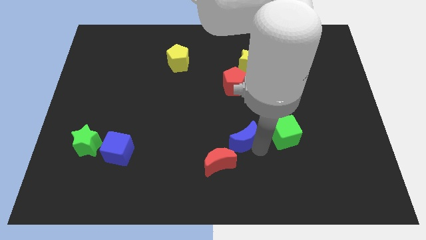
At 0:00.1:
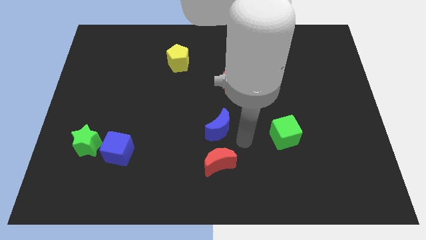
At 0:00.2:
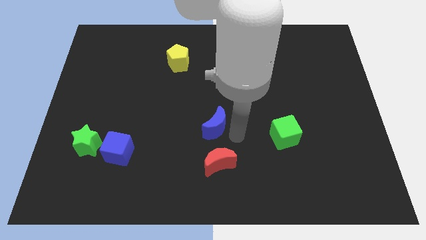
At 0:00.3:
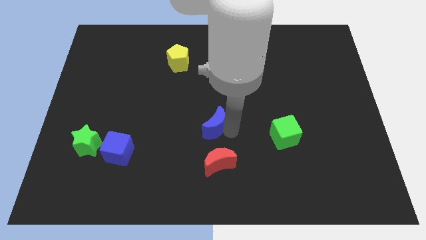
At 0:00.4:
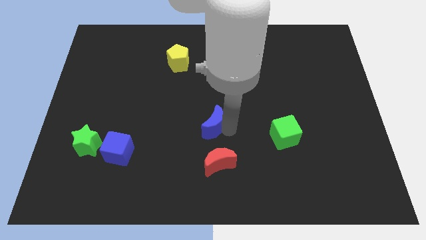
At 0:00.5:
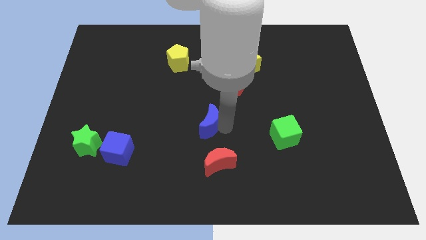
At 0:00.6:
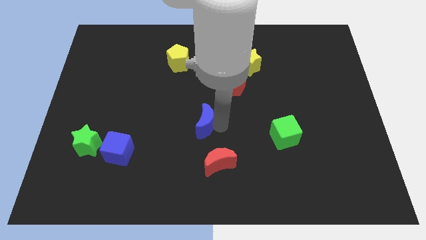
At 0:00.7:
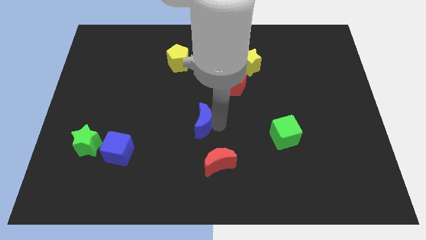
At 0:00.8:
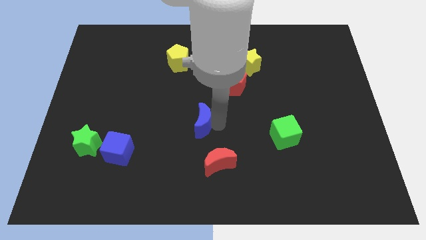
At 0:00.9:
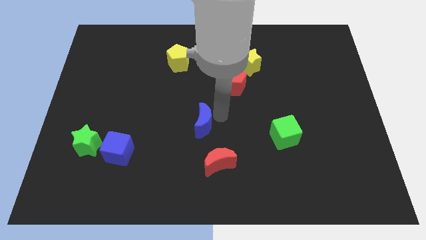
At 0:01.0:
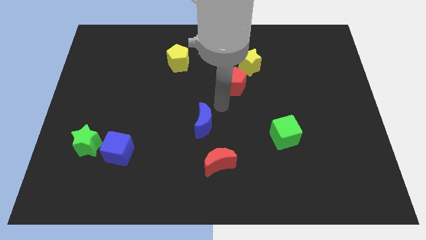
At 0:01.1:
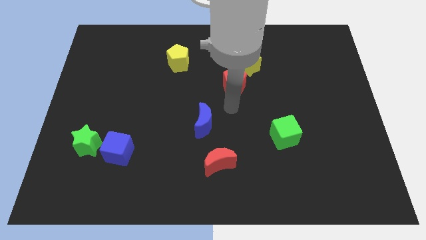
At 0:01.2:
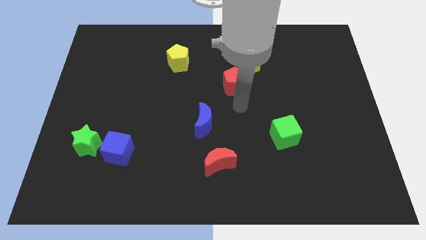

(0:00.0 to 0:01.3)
slide the blue crescent to the center of the board

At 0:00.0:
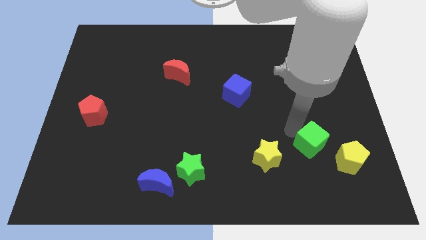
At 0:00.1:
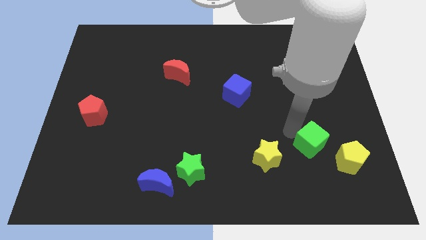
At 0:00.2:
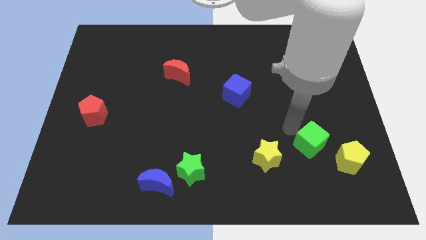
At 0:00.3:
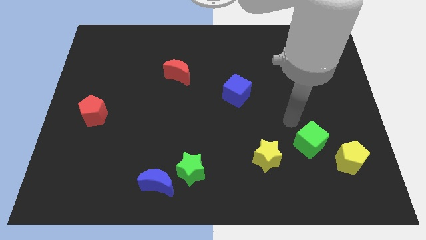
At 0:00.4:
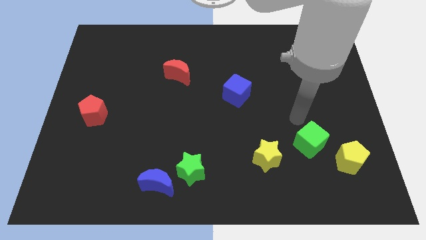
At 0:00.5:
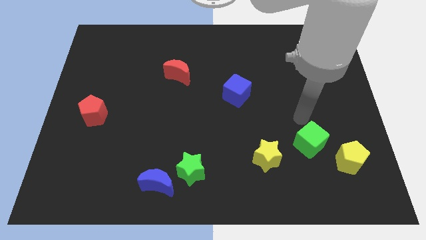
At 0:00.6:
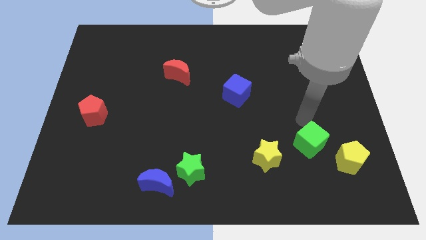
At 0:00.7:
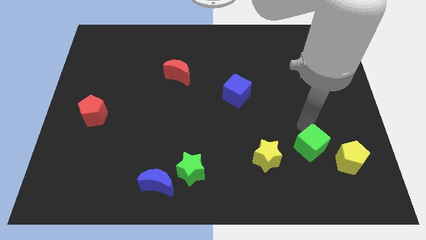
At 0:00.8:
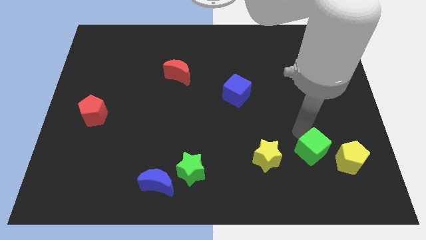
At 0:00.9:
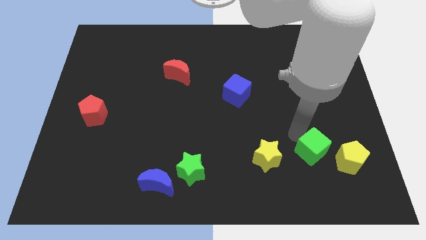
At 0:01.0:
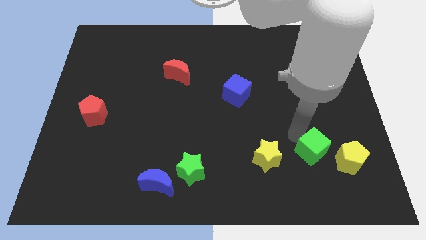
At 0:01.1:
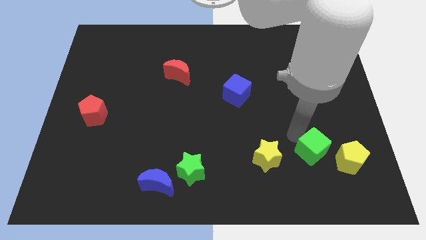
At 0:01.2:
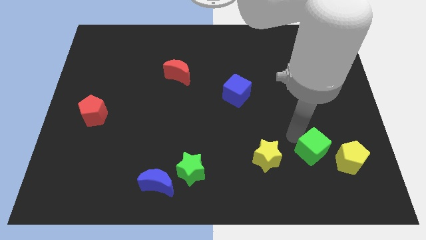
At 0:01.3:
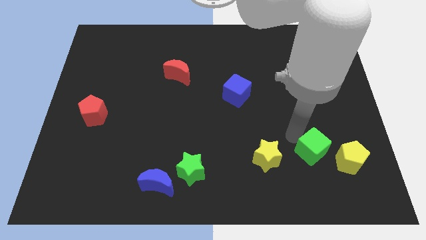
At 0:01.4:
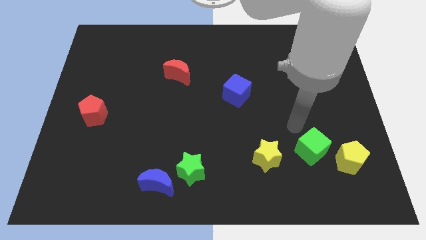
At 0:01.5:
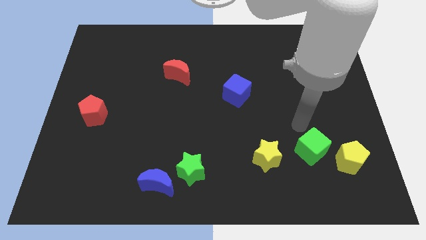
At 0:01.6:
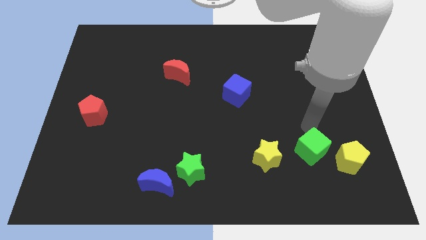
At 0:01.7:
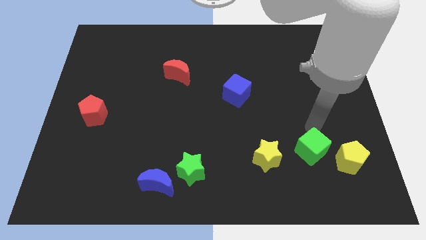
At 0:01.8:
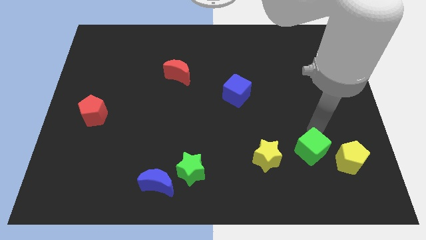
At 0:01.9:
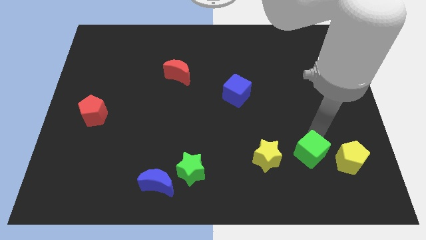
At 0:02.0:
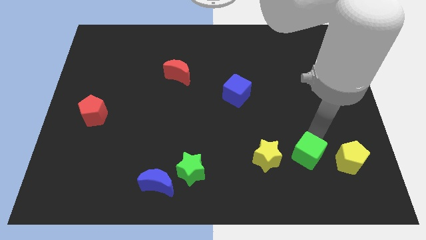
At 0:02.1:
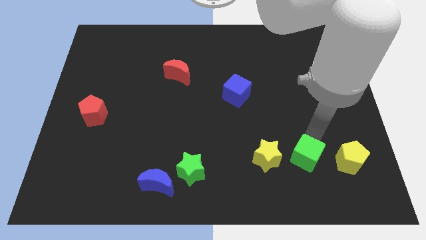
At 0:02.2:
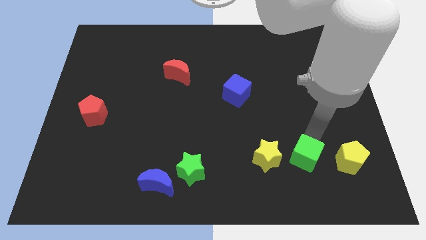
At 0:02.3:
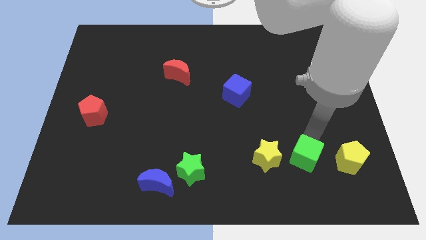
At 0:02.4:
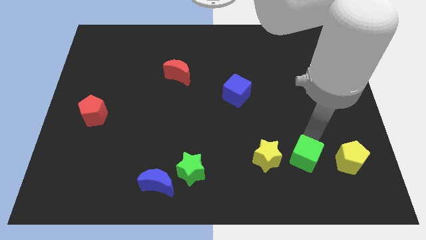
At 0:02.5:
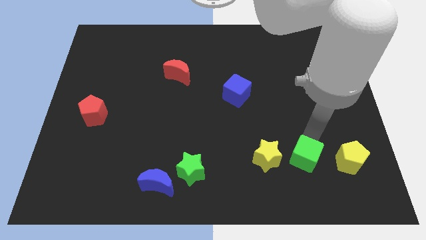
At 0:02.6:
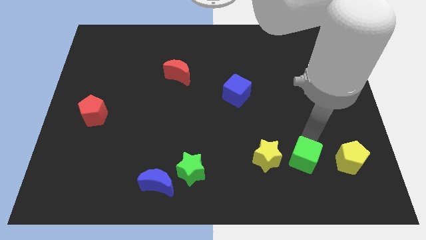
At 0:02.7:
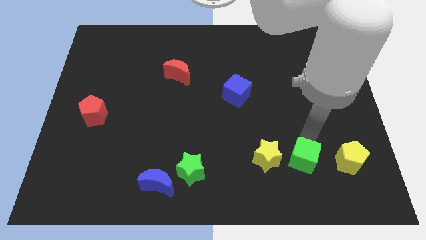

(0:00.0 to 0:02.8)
move the green cube to the right of yellow star

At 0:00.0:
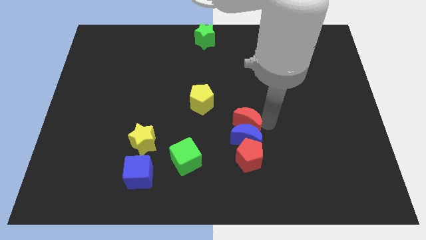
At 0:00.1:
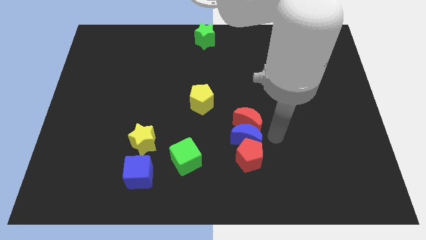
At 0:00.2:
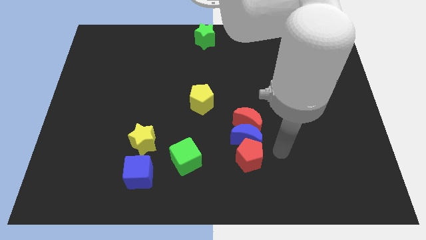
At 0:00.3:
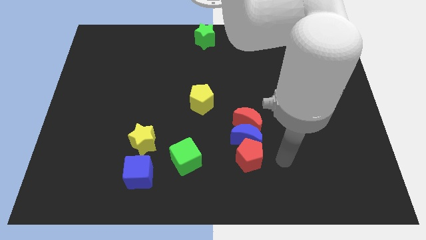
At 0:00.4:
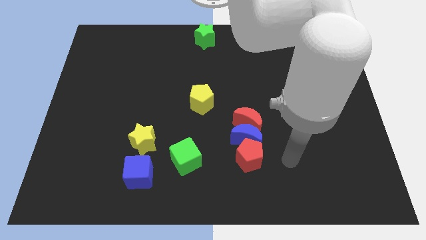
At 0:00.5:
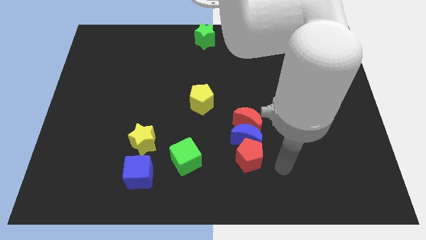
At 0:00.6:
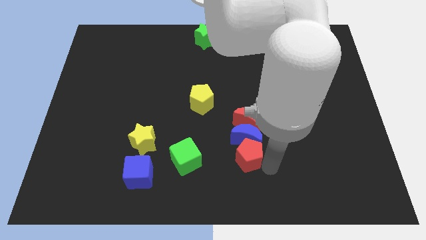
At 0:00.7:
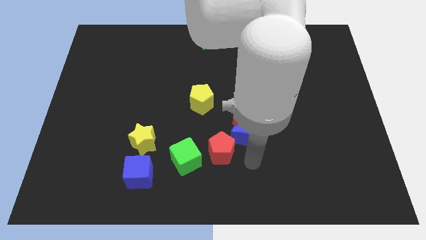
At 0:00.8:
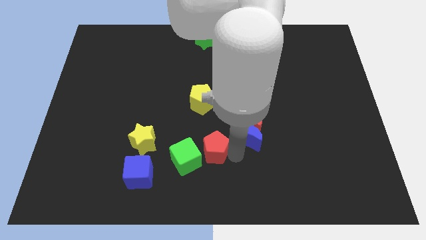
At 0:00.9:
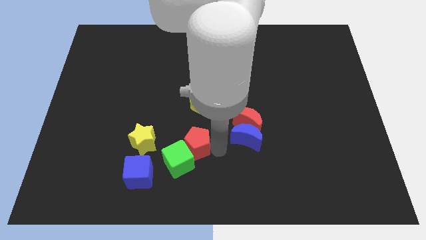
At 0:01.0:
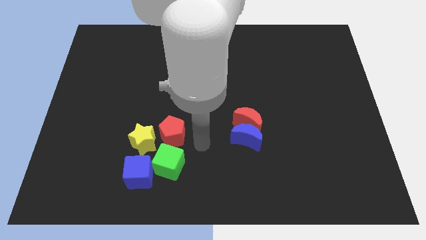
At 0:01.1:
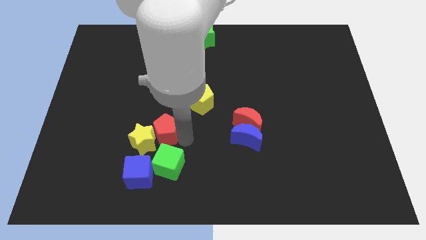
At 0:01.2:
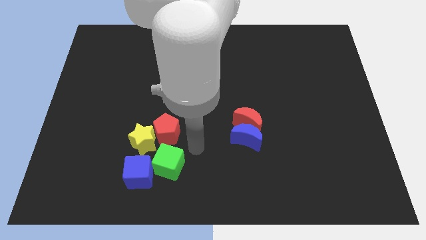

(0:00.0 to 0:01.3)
move the red pentagon to the top of the green cube

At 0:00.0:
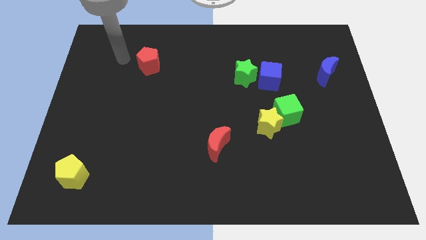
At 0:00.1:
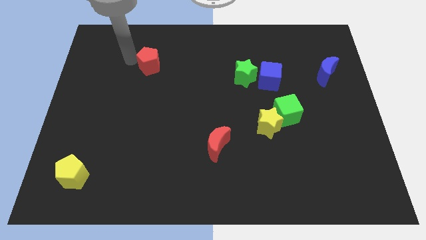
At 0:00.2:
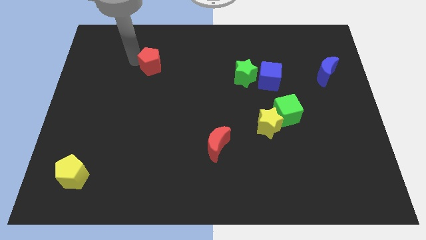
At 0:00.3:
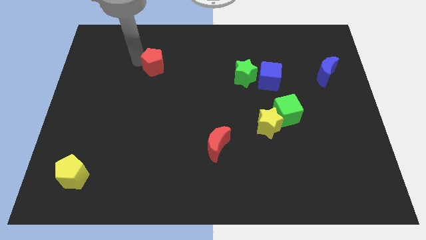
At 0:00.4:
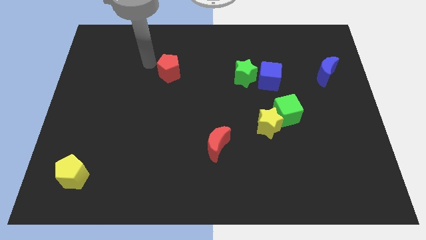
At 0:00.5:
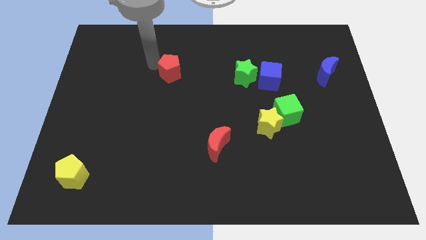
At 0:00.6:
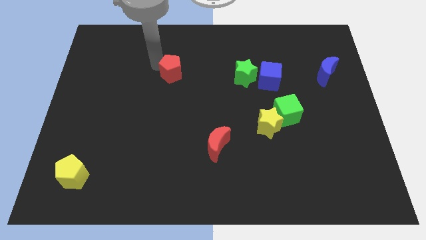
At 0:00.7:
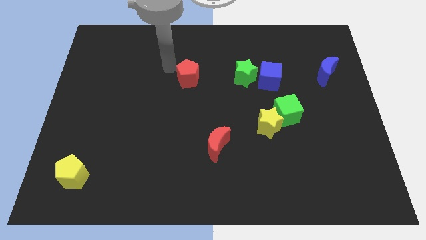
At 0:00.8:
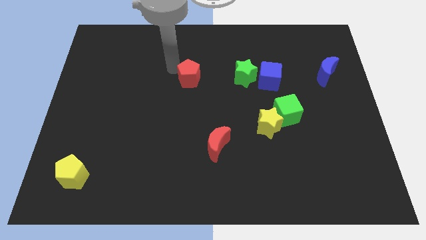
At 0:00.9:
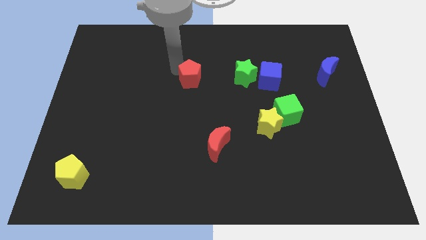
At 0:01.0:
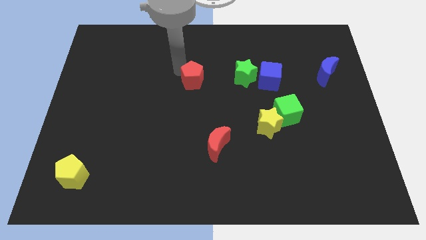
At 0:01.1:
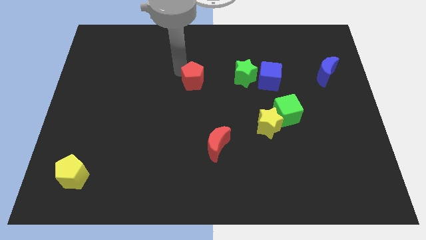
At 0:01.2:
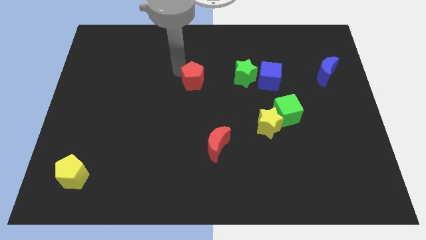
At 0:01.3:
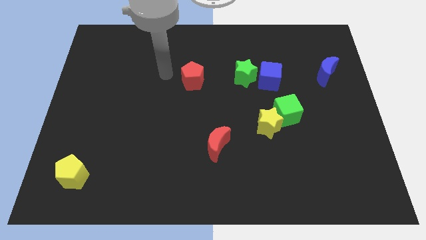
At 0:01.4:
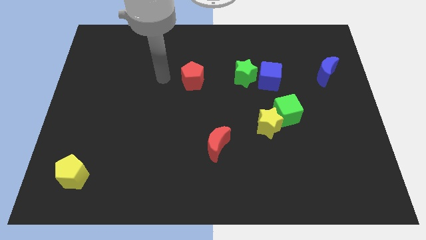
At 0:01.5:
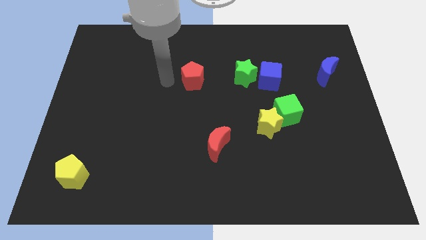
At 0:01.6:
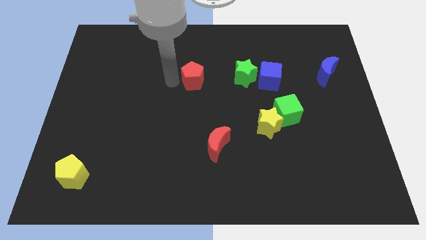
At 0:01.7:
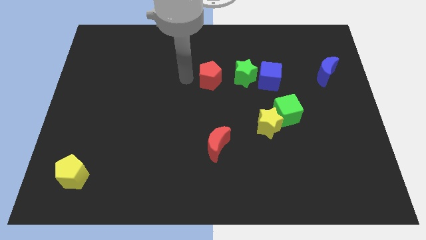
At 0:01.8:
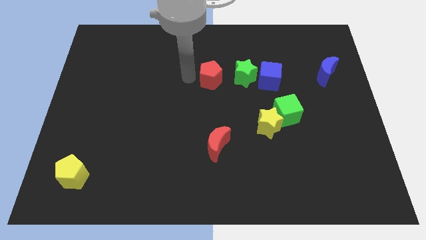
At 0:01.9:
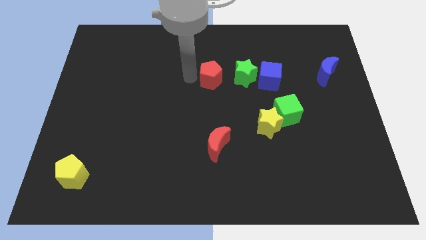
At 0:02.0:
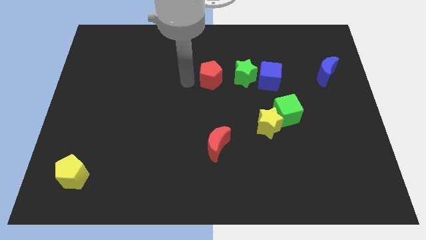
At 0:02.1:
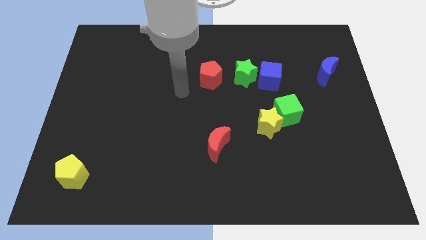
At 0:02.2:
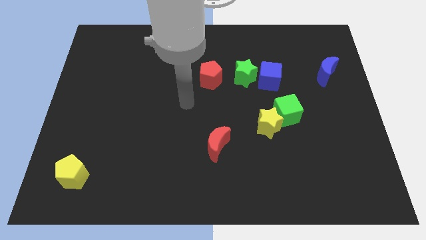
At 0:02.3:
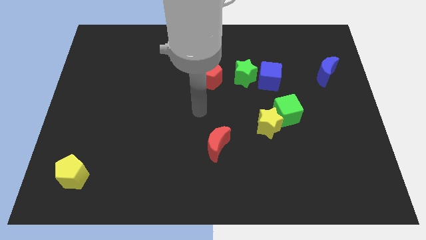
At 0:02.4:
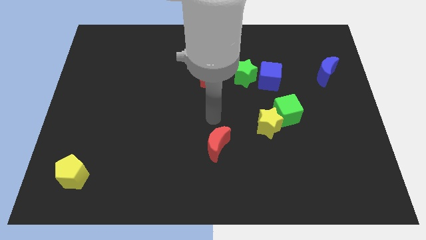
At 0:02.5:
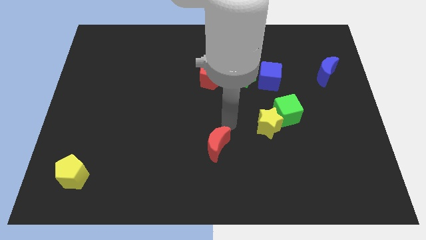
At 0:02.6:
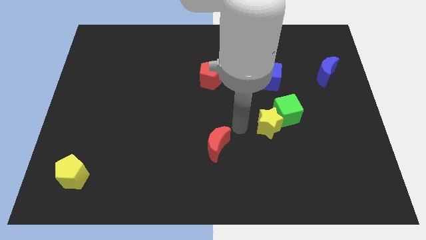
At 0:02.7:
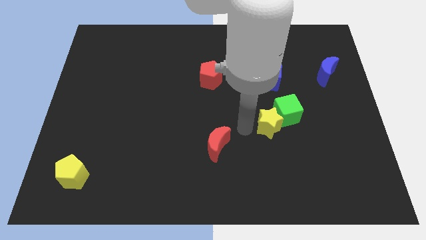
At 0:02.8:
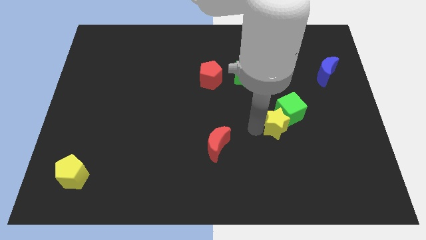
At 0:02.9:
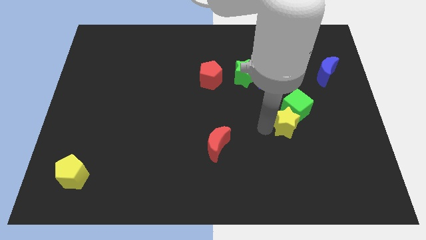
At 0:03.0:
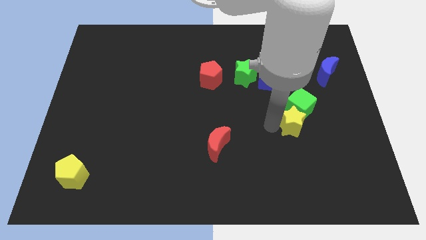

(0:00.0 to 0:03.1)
push the red pentagon and the yellow star slightly to the right

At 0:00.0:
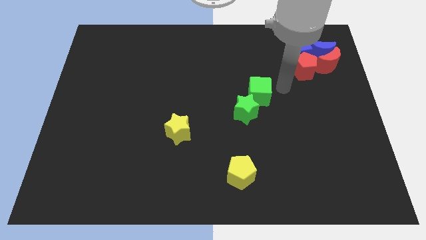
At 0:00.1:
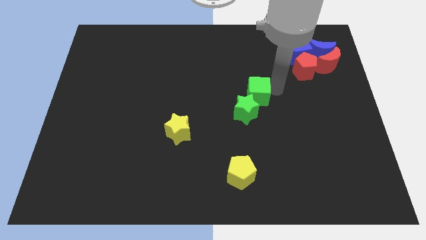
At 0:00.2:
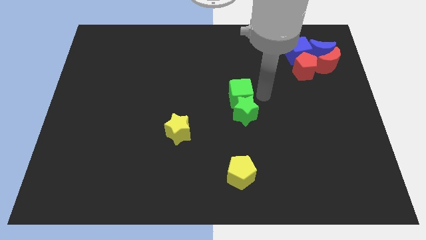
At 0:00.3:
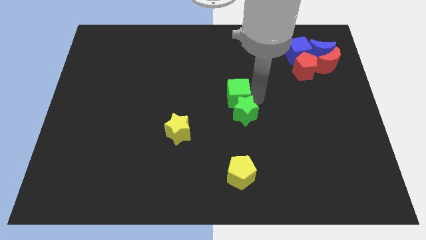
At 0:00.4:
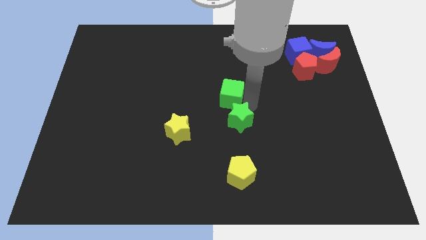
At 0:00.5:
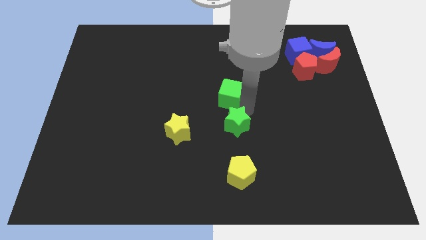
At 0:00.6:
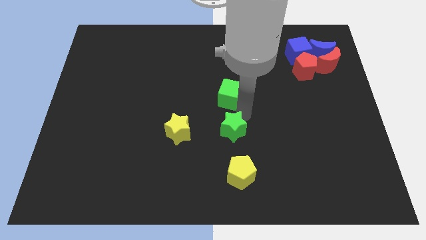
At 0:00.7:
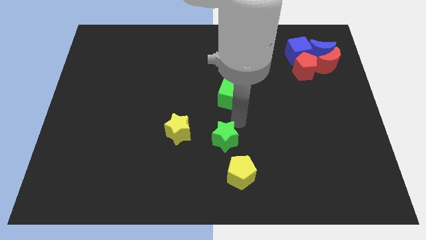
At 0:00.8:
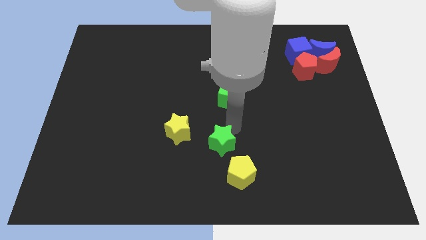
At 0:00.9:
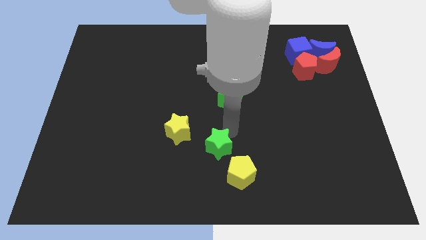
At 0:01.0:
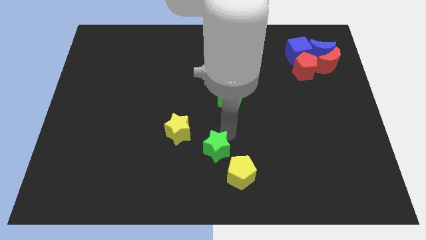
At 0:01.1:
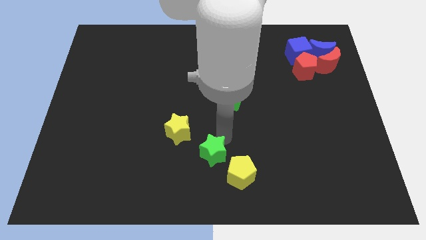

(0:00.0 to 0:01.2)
place green star diagonally to yellow star
